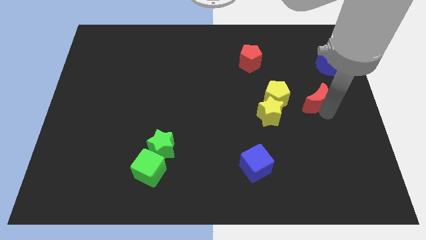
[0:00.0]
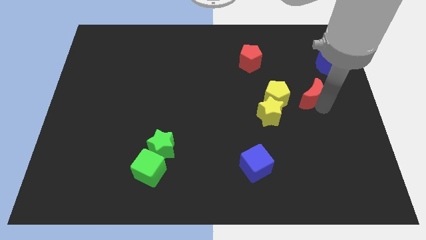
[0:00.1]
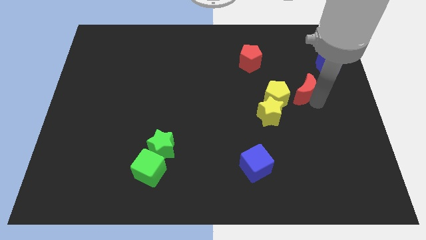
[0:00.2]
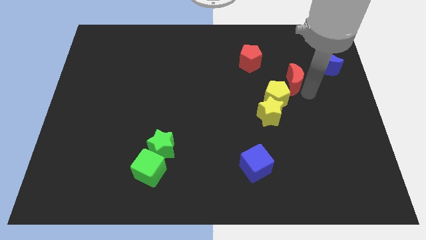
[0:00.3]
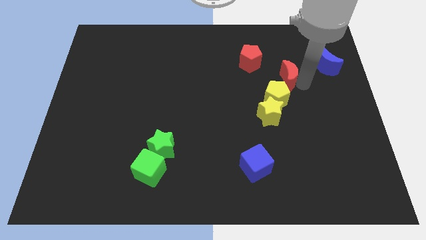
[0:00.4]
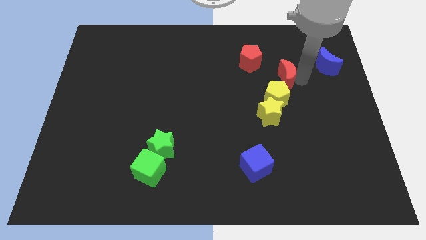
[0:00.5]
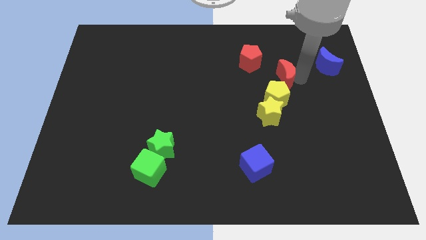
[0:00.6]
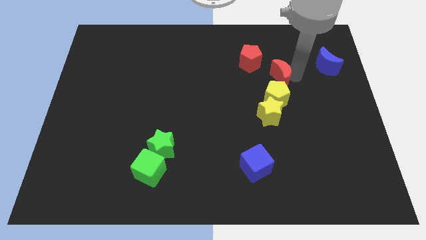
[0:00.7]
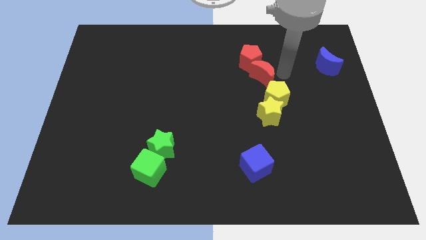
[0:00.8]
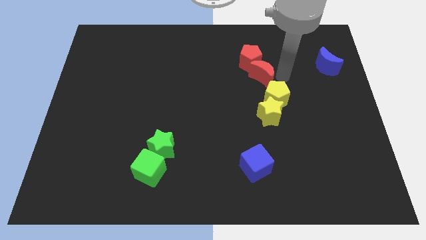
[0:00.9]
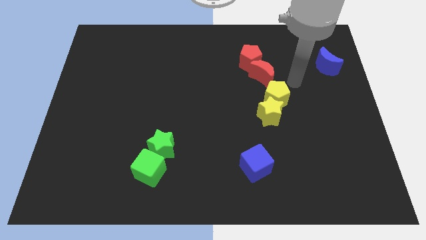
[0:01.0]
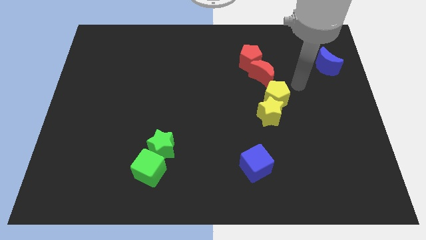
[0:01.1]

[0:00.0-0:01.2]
place the red moon above the yellow pentagon

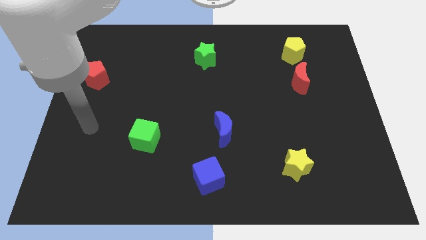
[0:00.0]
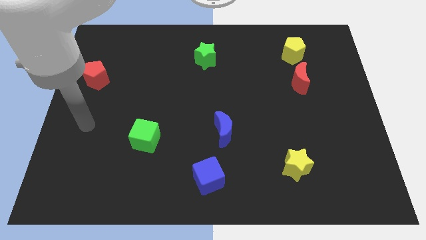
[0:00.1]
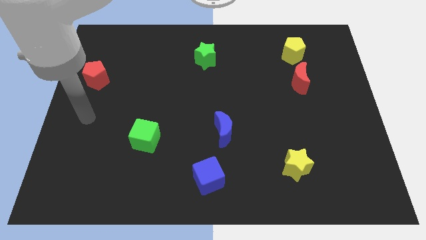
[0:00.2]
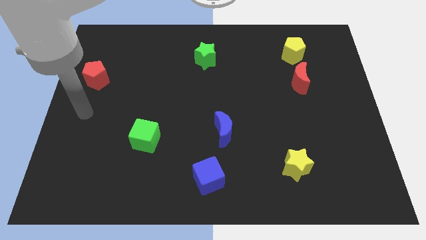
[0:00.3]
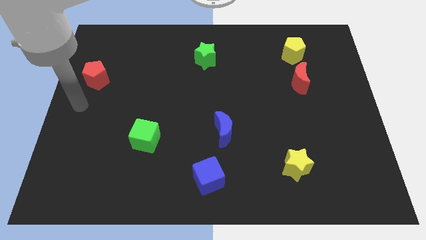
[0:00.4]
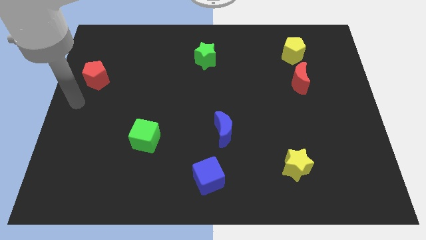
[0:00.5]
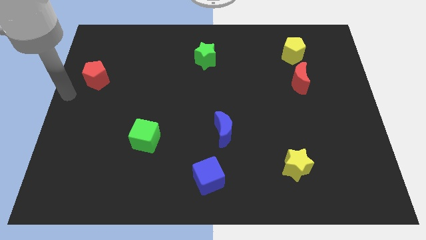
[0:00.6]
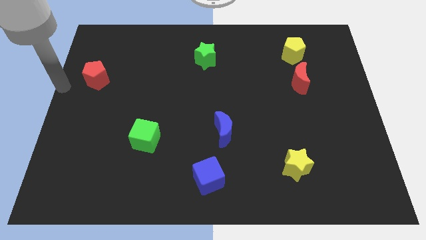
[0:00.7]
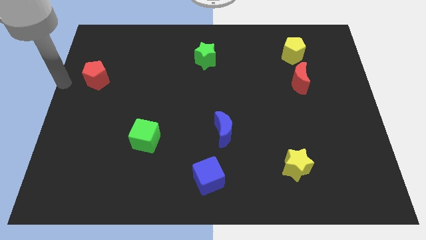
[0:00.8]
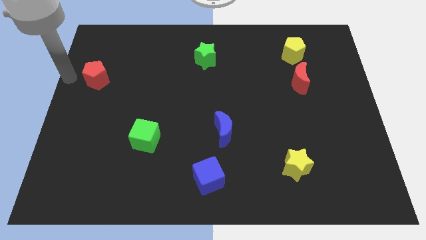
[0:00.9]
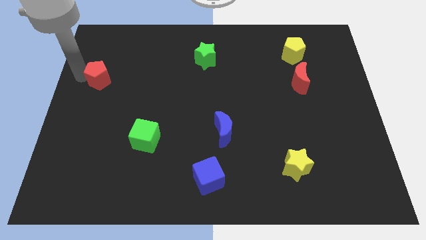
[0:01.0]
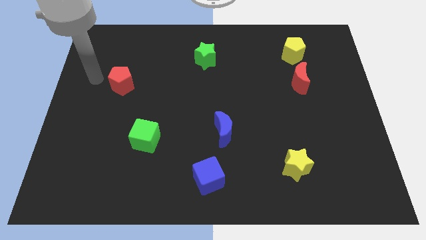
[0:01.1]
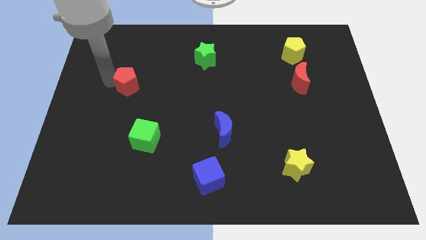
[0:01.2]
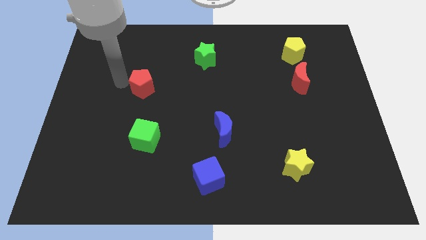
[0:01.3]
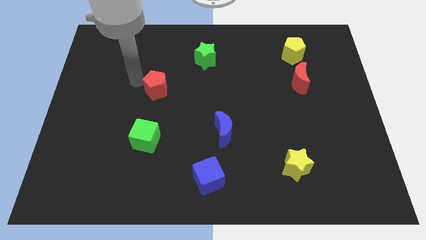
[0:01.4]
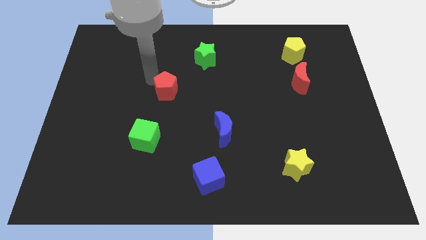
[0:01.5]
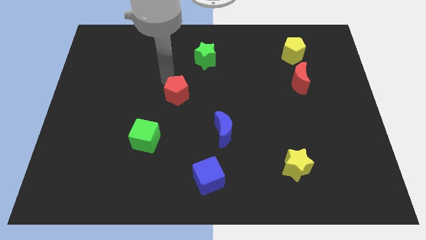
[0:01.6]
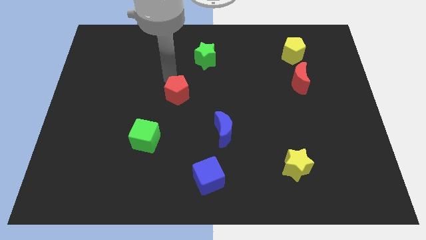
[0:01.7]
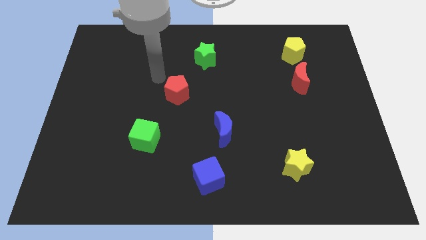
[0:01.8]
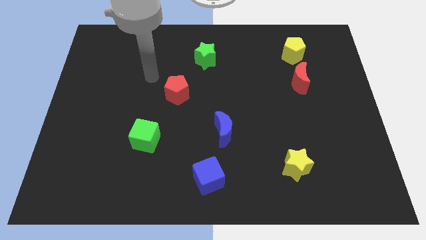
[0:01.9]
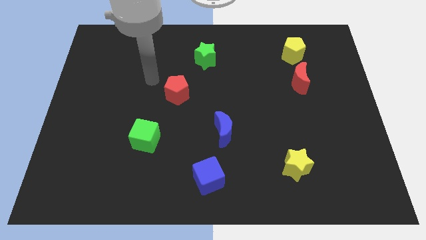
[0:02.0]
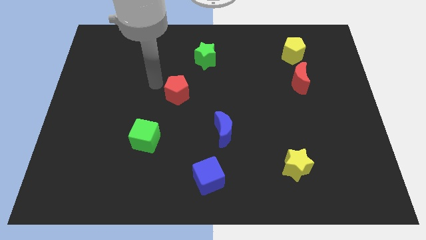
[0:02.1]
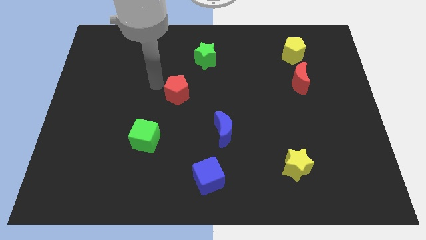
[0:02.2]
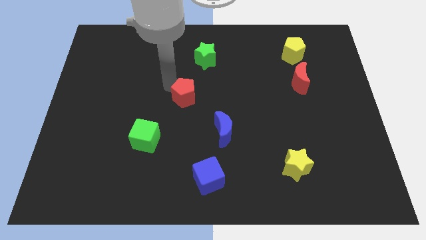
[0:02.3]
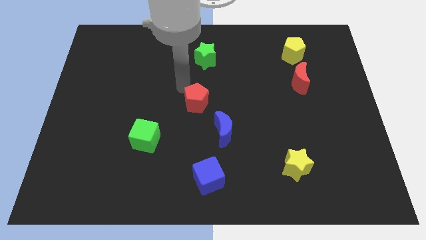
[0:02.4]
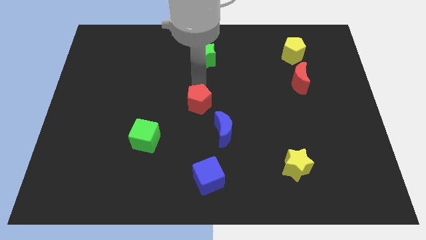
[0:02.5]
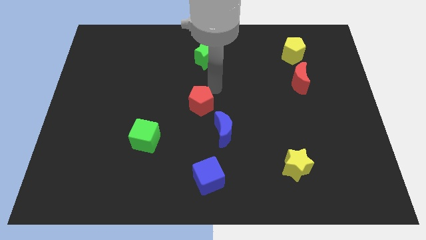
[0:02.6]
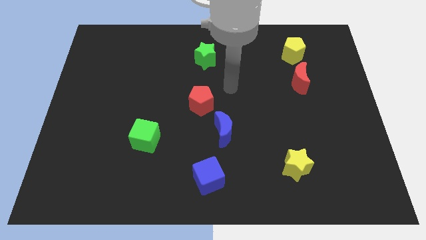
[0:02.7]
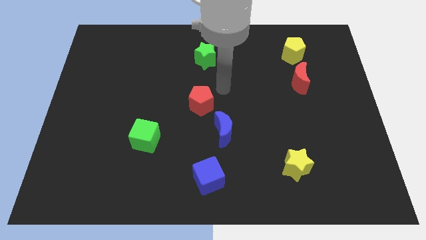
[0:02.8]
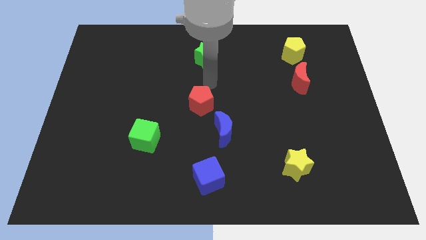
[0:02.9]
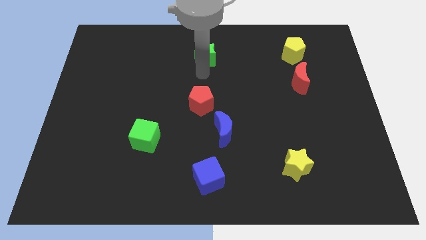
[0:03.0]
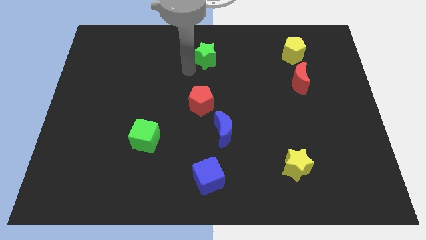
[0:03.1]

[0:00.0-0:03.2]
push the red pentagon towards the blue crescent

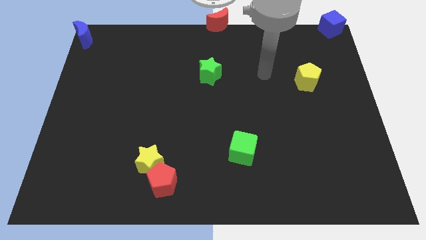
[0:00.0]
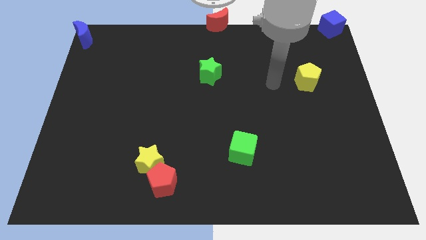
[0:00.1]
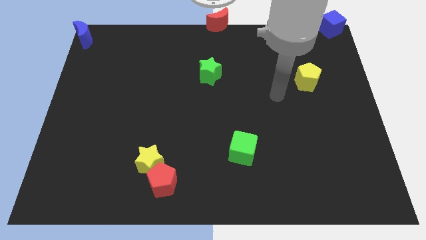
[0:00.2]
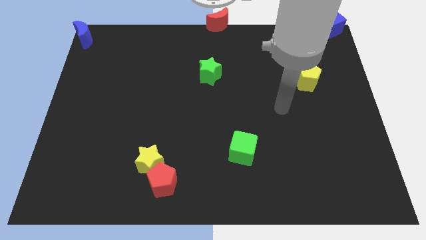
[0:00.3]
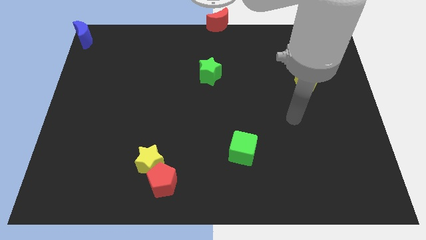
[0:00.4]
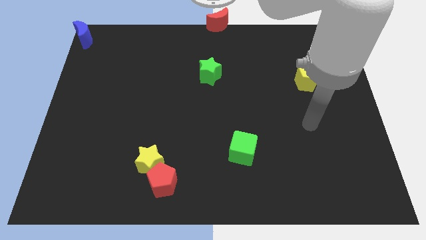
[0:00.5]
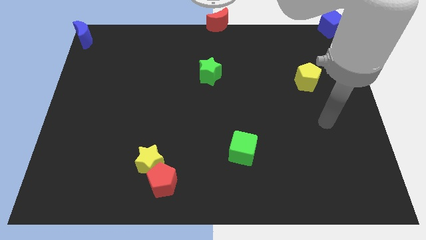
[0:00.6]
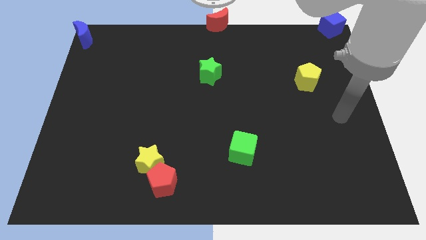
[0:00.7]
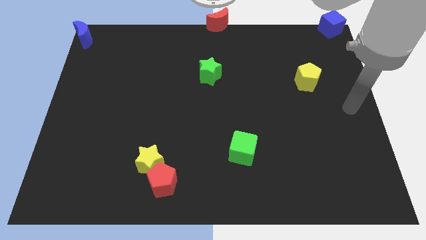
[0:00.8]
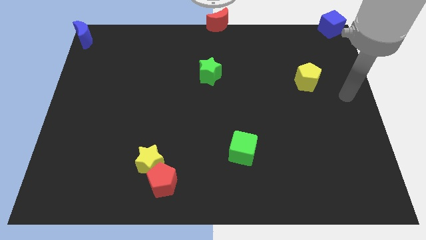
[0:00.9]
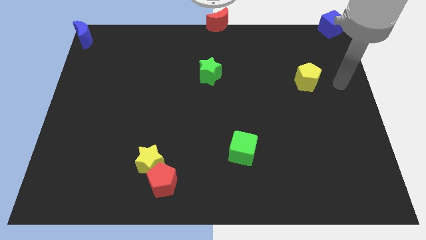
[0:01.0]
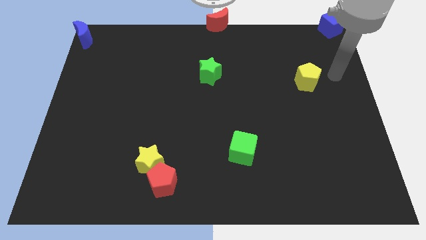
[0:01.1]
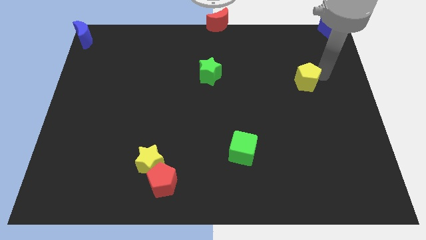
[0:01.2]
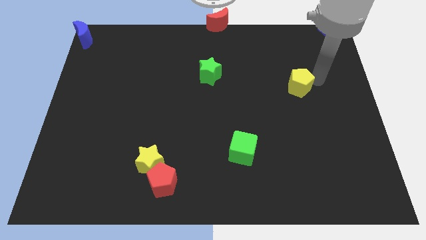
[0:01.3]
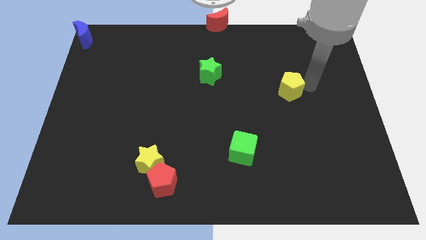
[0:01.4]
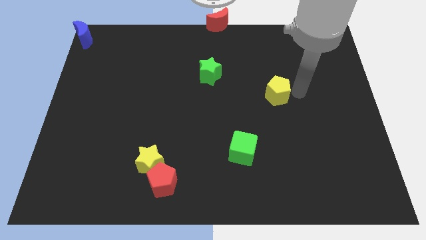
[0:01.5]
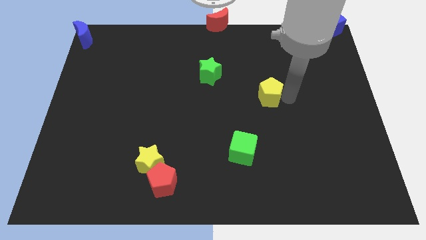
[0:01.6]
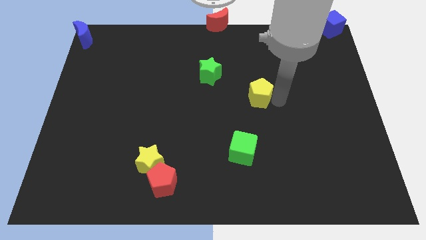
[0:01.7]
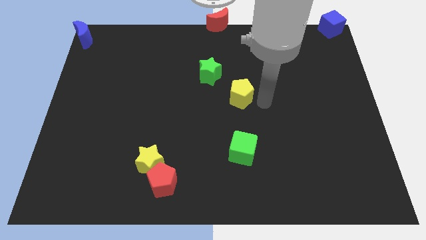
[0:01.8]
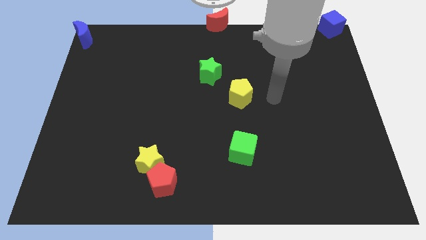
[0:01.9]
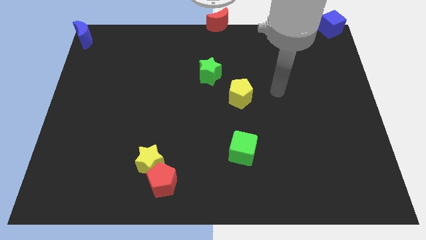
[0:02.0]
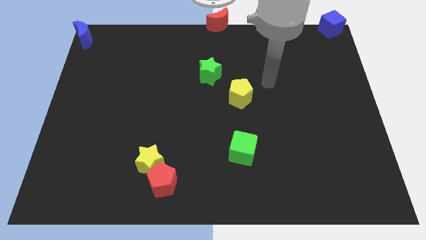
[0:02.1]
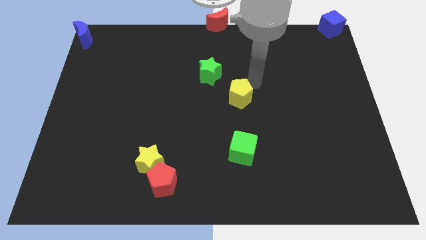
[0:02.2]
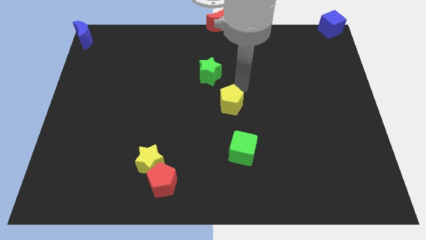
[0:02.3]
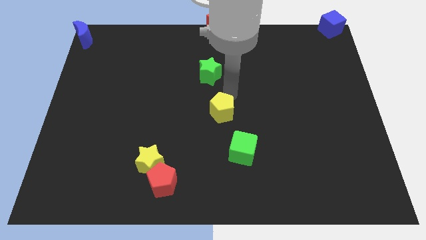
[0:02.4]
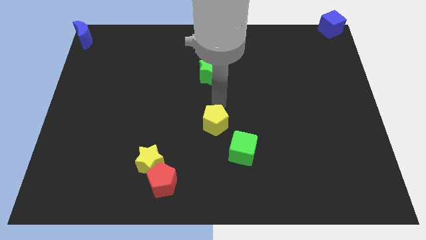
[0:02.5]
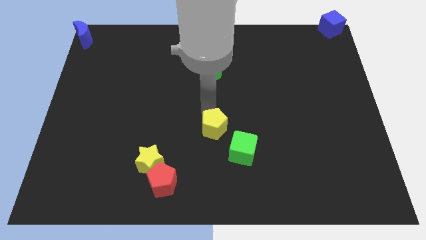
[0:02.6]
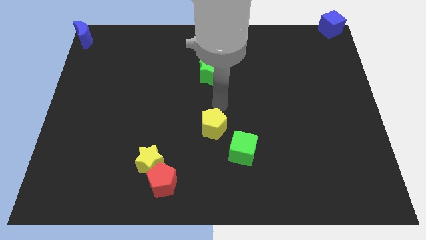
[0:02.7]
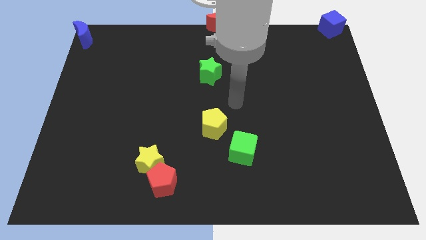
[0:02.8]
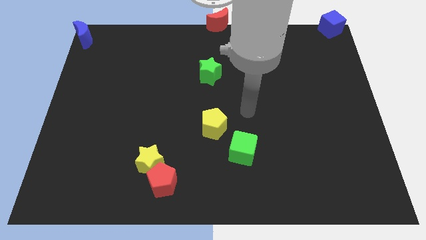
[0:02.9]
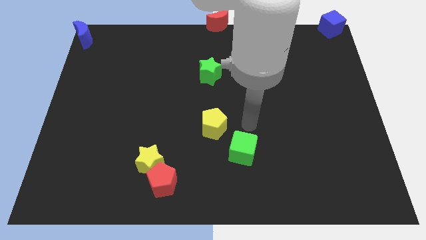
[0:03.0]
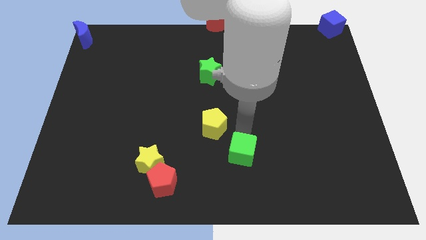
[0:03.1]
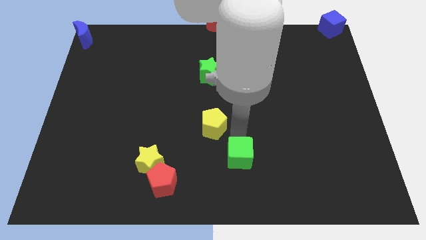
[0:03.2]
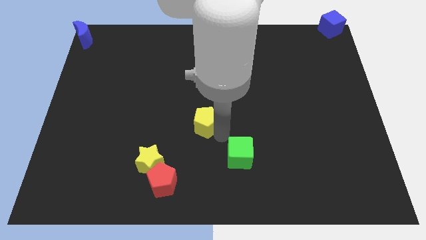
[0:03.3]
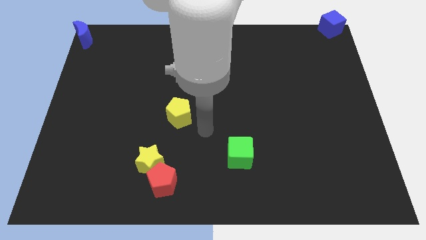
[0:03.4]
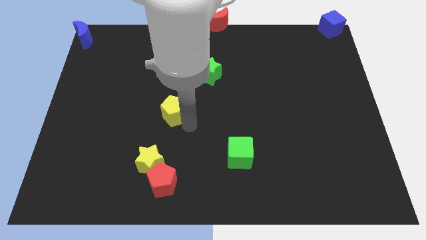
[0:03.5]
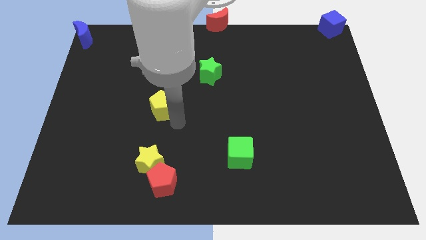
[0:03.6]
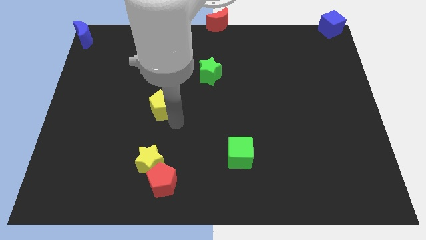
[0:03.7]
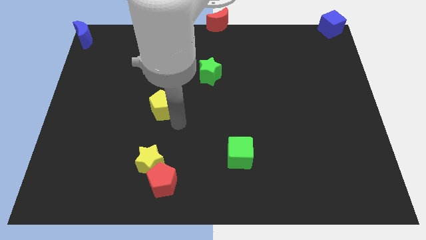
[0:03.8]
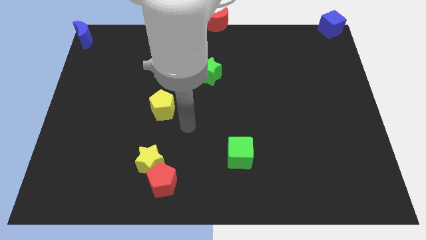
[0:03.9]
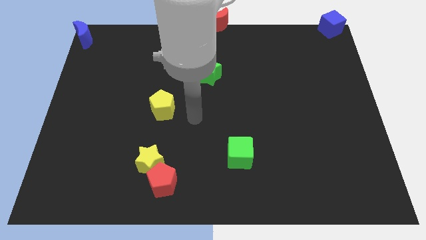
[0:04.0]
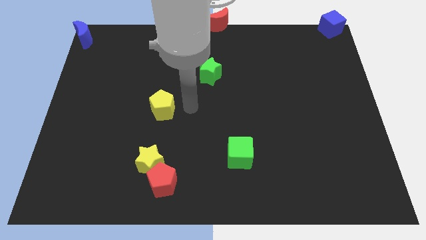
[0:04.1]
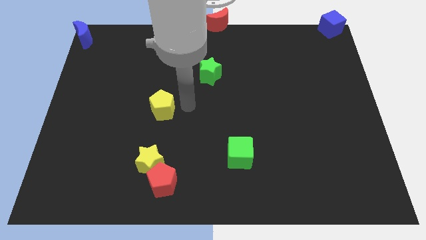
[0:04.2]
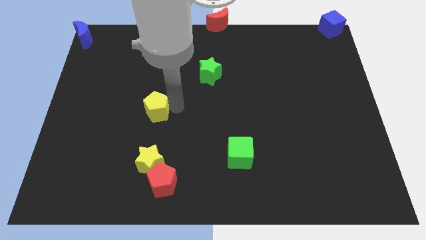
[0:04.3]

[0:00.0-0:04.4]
place the yellow pentagon above the yellow star

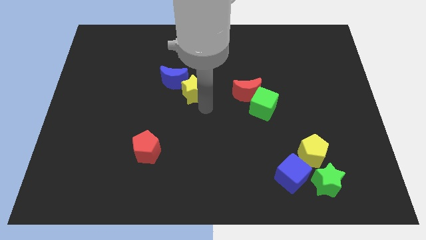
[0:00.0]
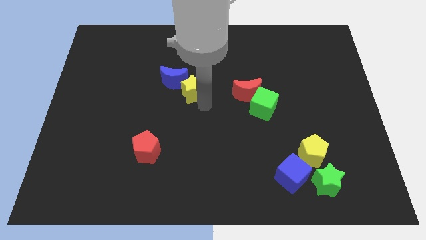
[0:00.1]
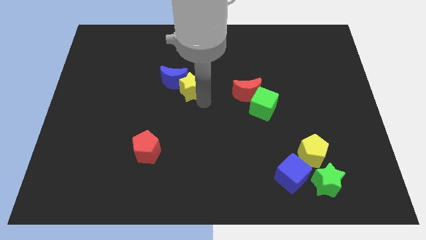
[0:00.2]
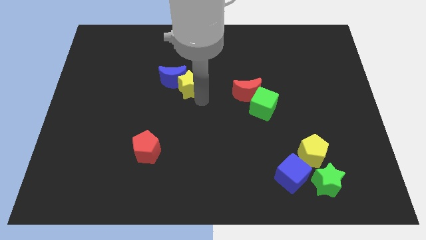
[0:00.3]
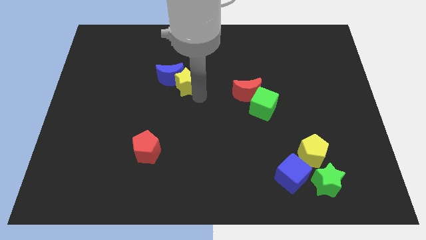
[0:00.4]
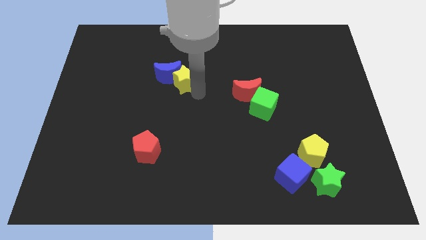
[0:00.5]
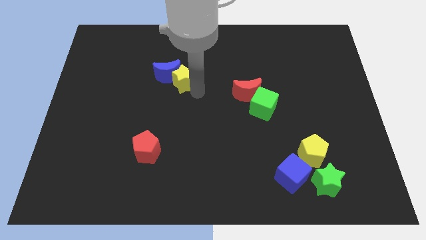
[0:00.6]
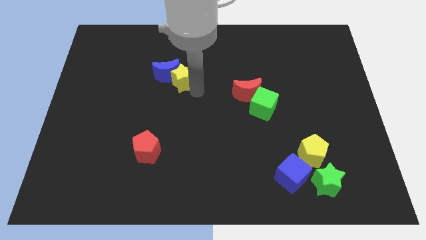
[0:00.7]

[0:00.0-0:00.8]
push the yellow star into the blue moon
